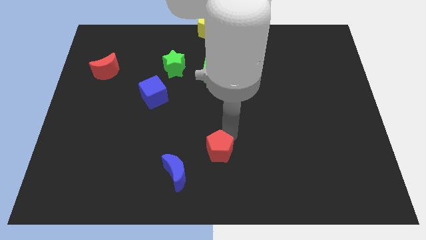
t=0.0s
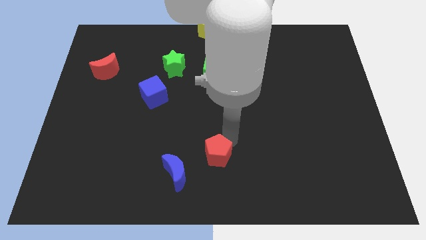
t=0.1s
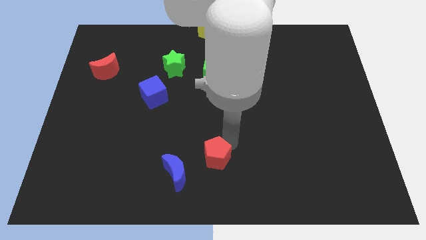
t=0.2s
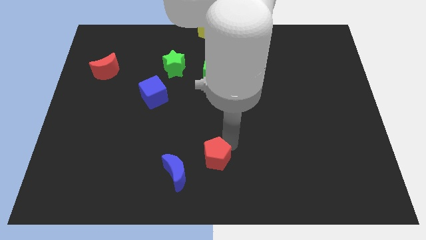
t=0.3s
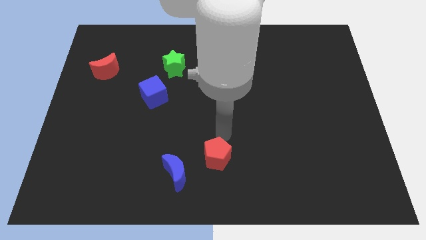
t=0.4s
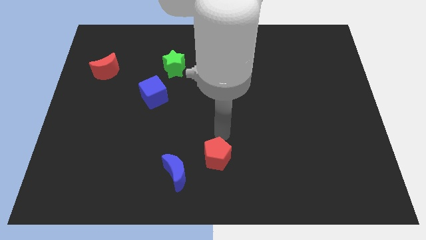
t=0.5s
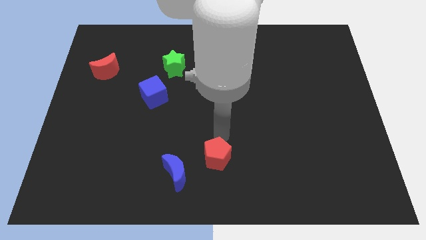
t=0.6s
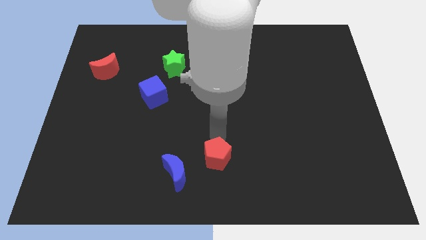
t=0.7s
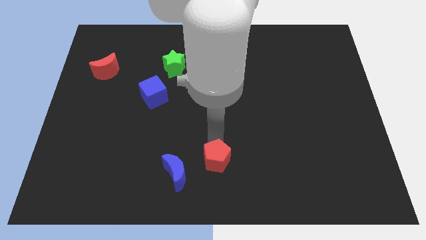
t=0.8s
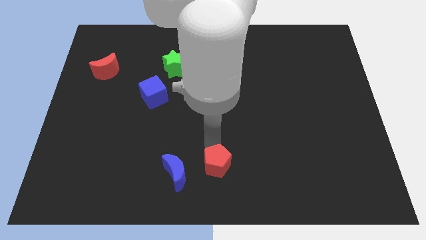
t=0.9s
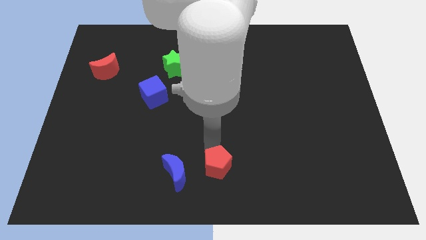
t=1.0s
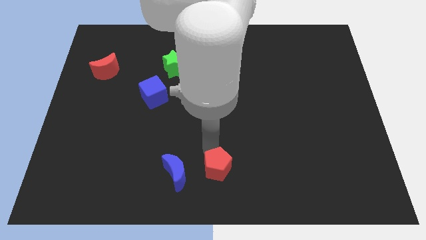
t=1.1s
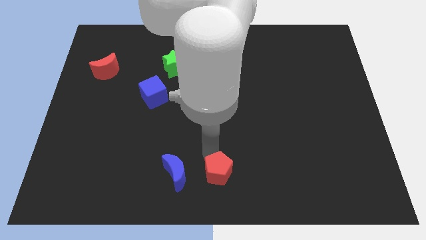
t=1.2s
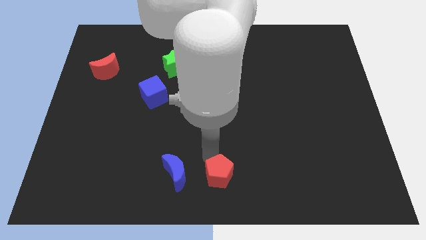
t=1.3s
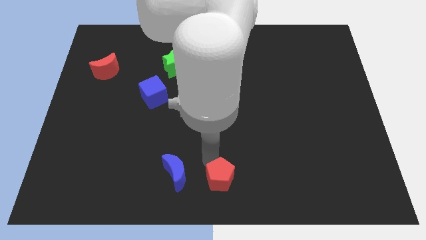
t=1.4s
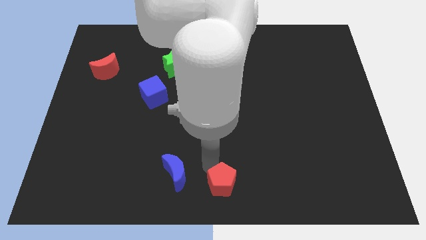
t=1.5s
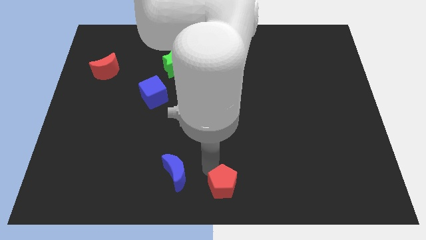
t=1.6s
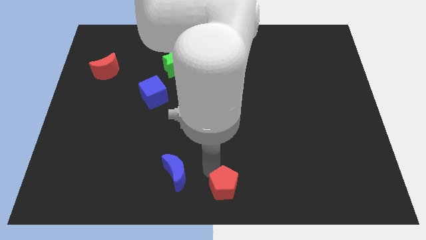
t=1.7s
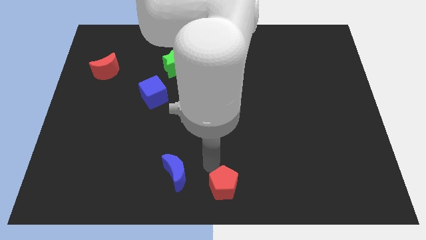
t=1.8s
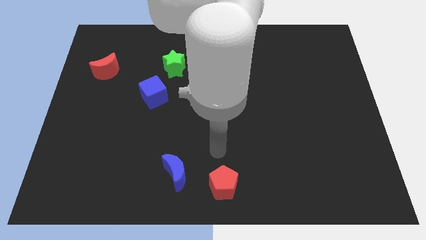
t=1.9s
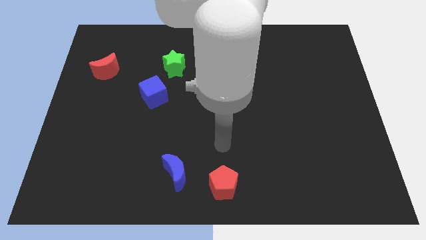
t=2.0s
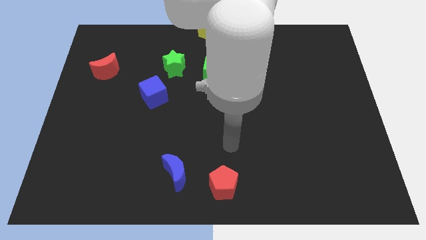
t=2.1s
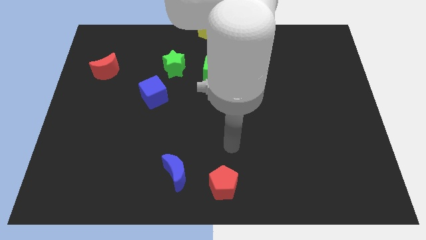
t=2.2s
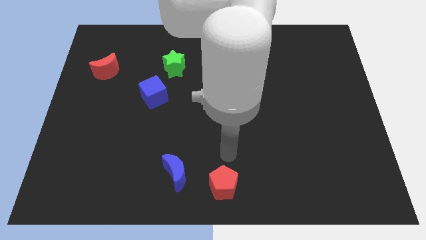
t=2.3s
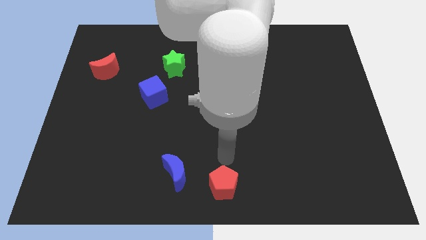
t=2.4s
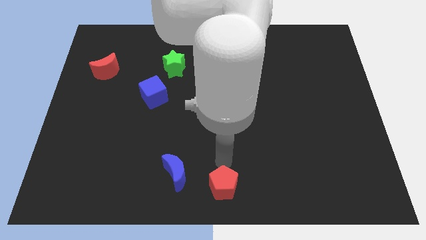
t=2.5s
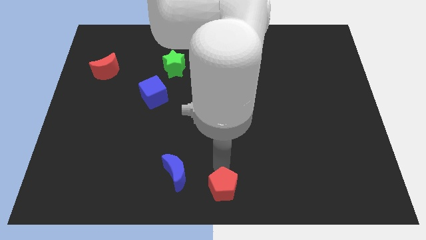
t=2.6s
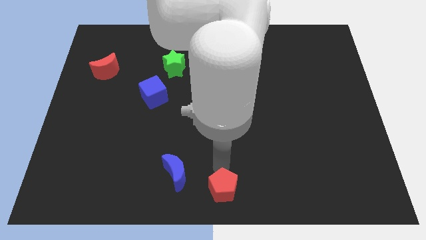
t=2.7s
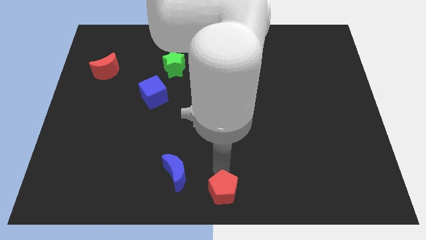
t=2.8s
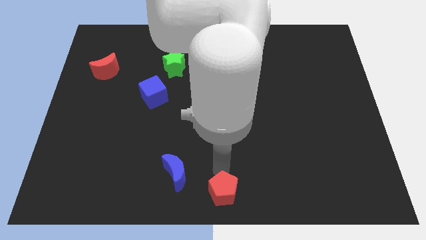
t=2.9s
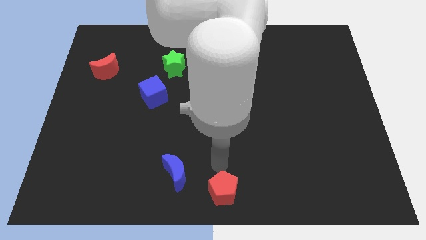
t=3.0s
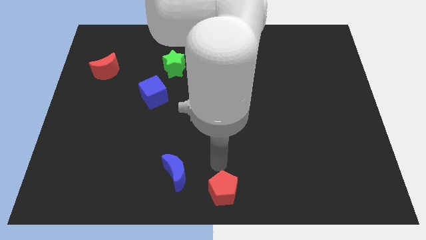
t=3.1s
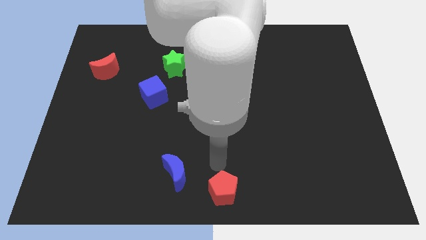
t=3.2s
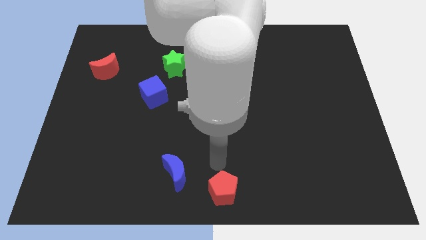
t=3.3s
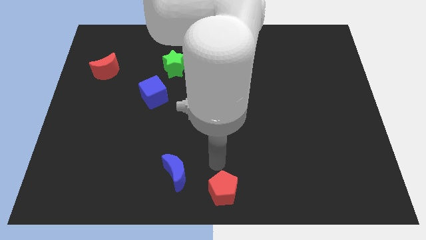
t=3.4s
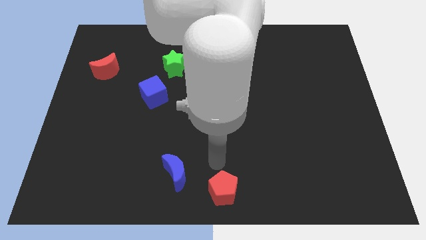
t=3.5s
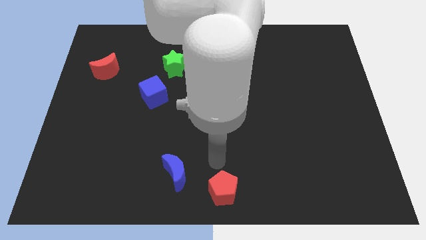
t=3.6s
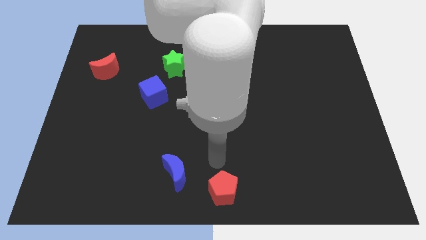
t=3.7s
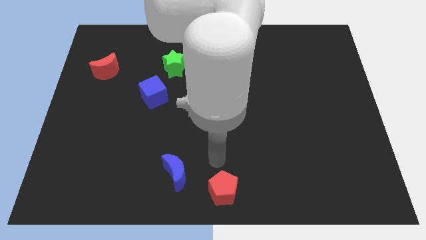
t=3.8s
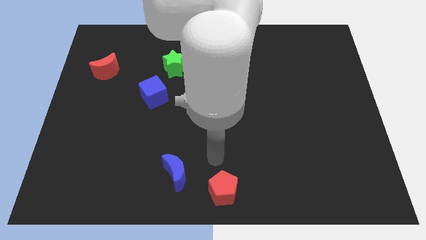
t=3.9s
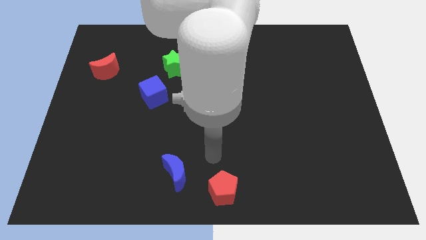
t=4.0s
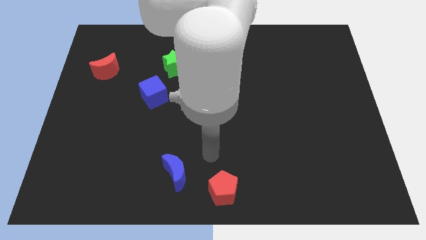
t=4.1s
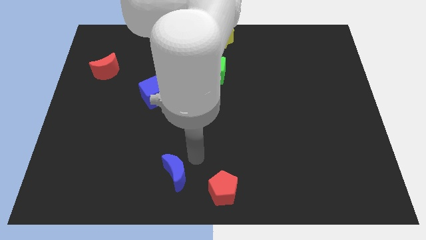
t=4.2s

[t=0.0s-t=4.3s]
move the red pentagon towards the bottom centre of the board

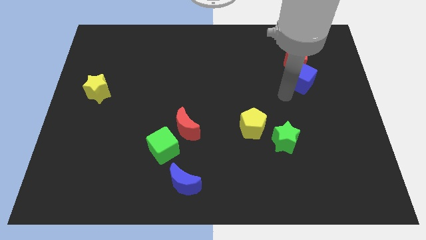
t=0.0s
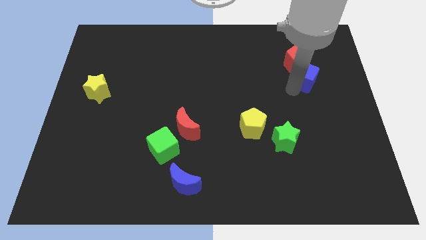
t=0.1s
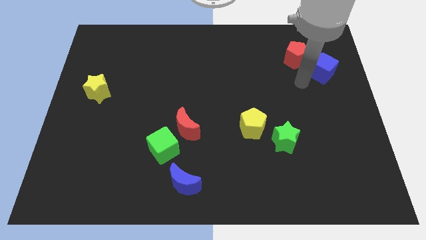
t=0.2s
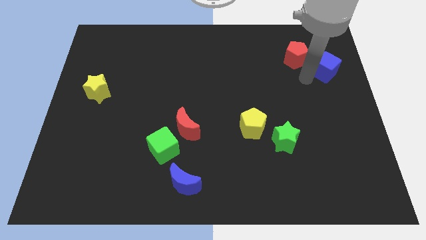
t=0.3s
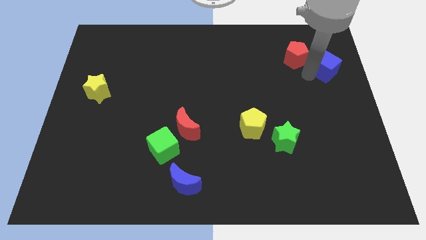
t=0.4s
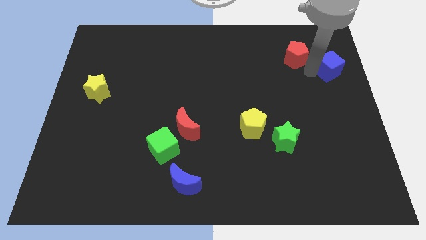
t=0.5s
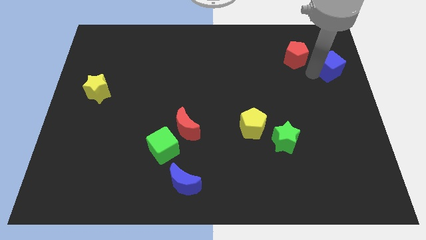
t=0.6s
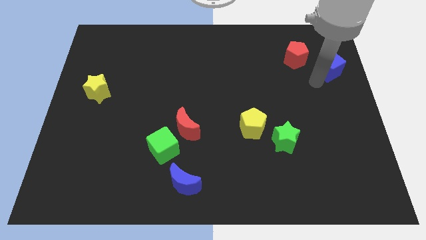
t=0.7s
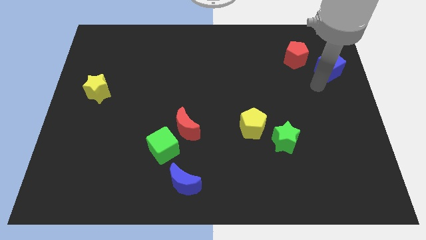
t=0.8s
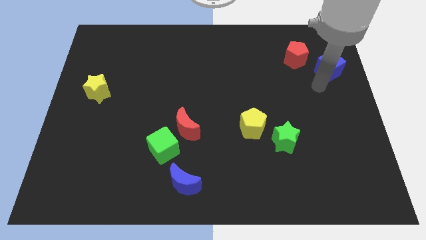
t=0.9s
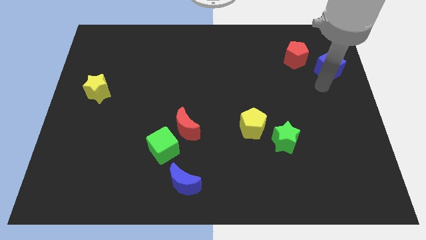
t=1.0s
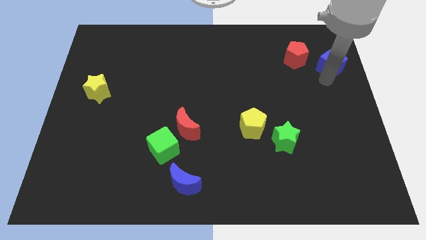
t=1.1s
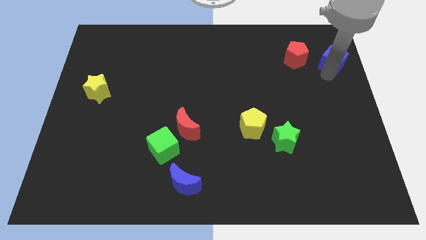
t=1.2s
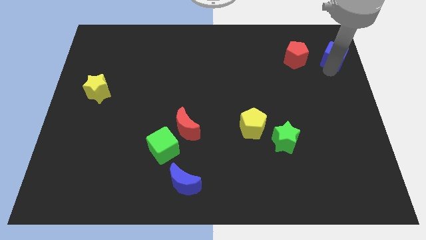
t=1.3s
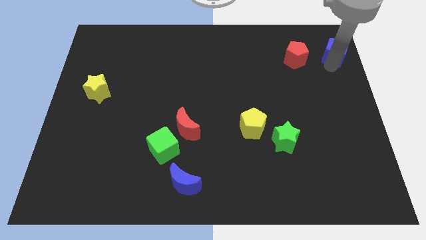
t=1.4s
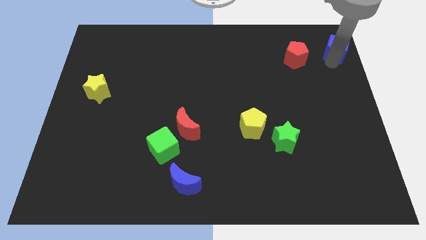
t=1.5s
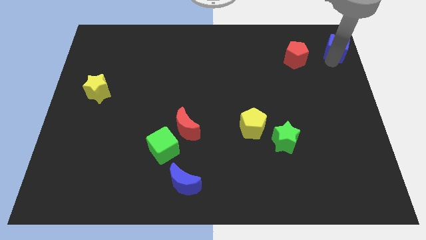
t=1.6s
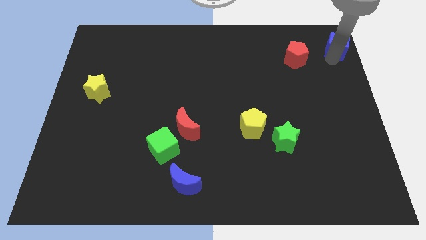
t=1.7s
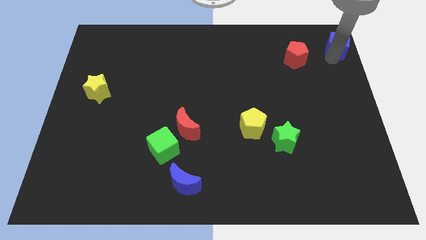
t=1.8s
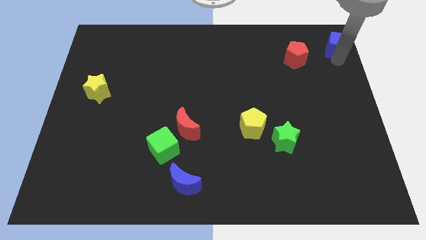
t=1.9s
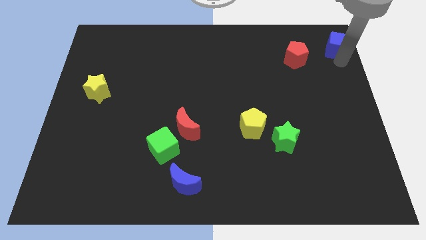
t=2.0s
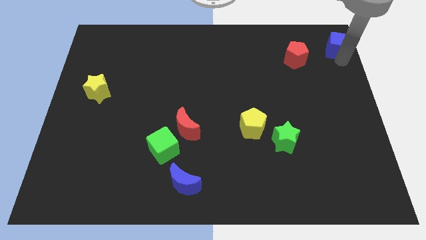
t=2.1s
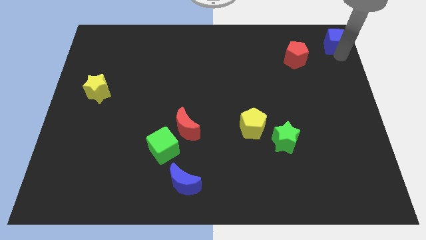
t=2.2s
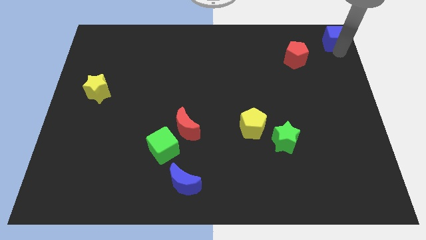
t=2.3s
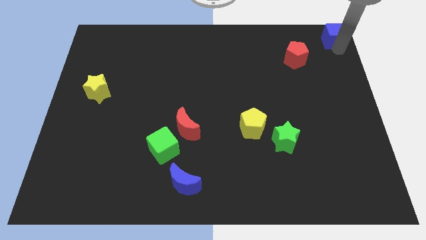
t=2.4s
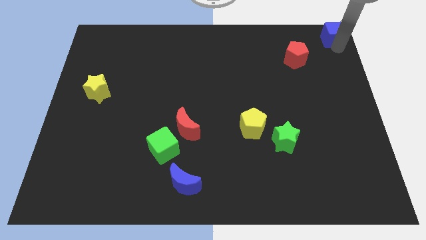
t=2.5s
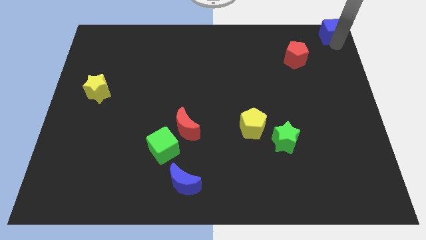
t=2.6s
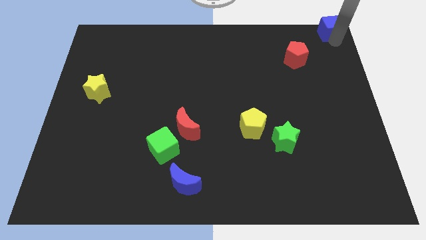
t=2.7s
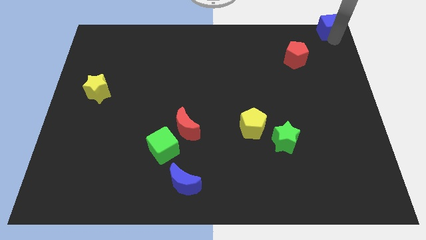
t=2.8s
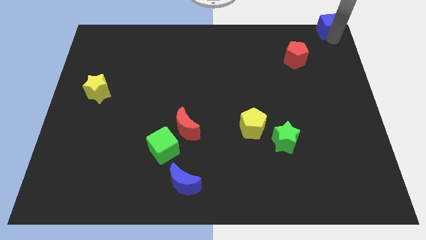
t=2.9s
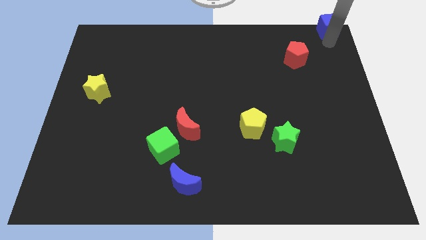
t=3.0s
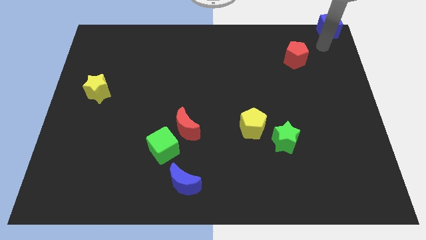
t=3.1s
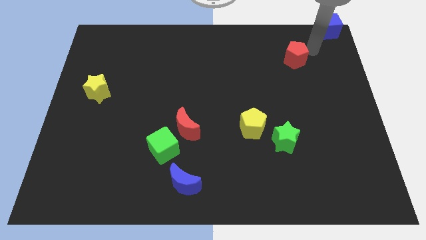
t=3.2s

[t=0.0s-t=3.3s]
move the blue cube to the top right corner of the board

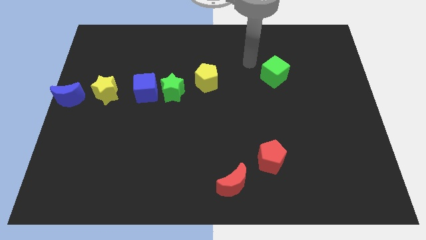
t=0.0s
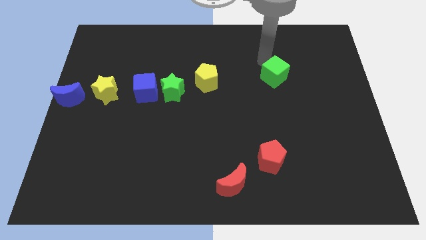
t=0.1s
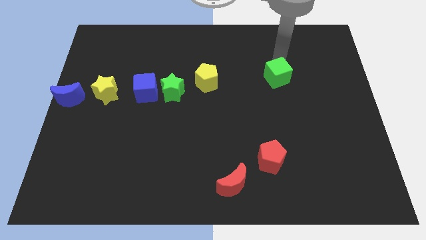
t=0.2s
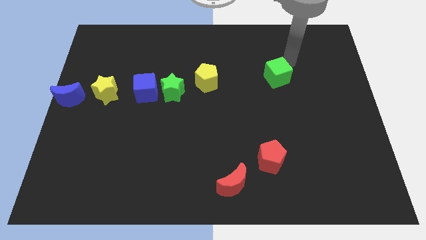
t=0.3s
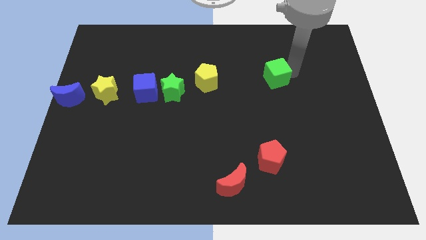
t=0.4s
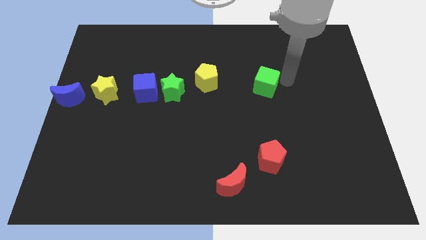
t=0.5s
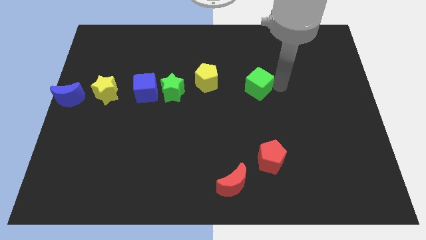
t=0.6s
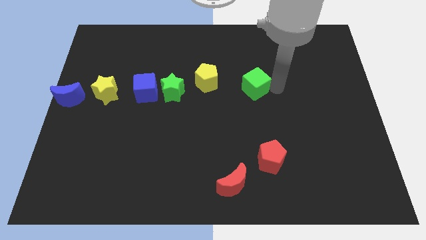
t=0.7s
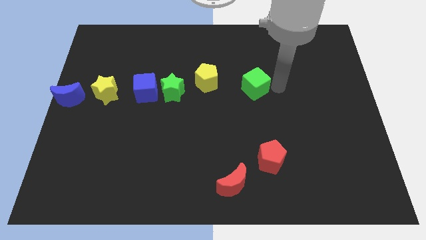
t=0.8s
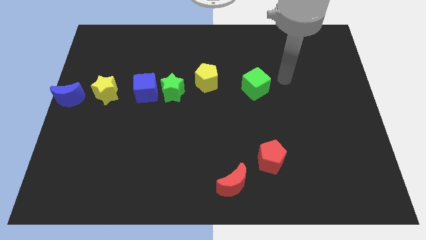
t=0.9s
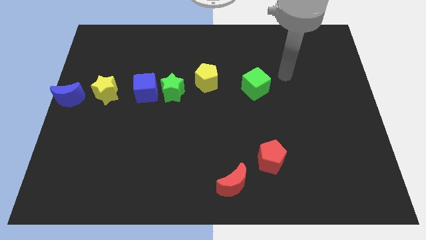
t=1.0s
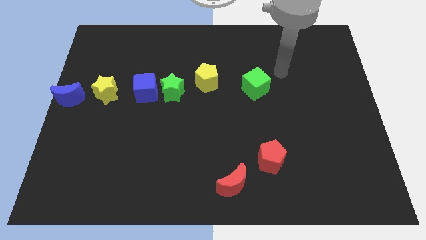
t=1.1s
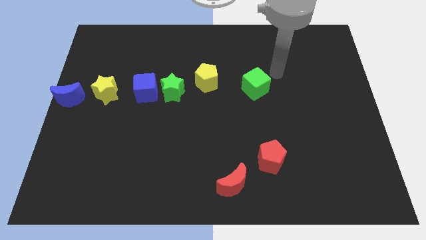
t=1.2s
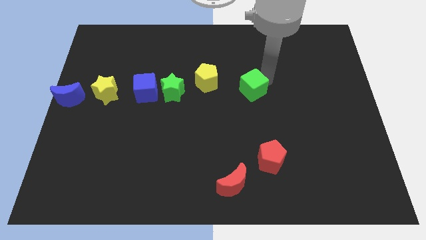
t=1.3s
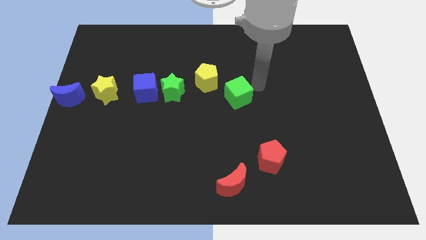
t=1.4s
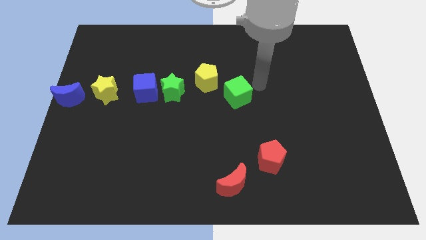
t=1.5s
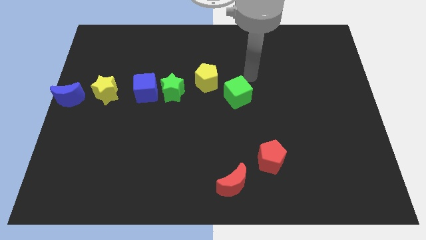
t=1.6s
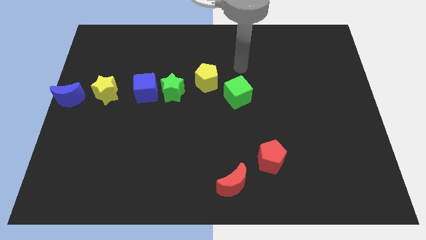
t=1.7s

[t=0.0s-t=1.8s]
place green cube to the bottom right side of the yellow pentagon
